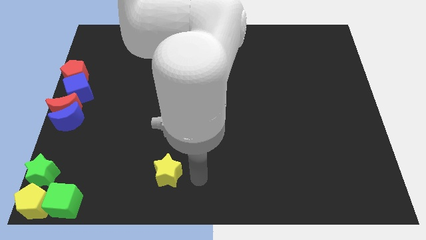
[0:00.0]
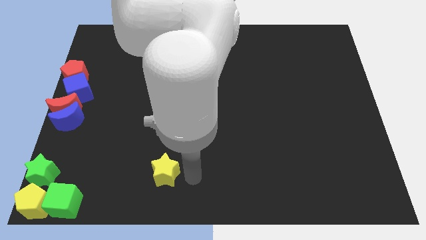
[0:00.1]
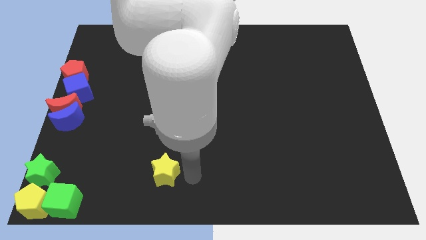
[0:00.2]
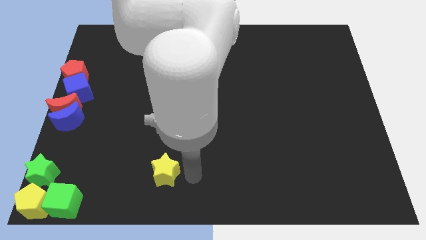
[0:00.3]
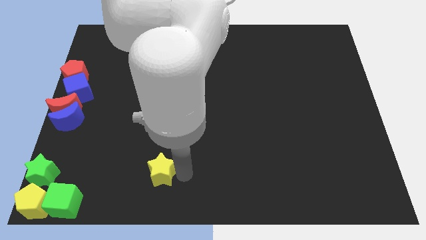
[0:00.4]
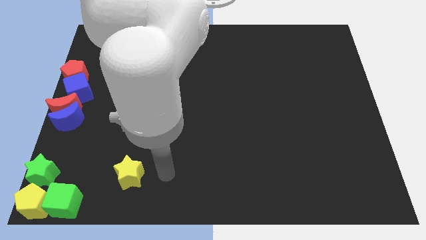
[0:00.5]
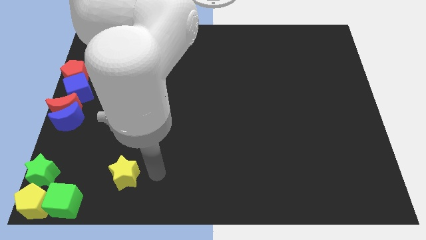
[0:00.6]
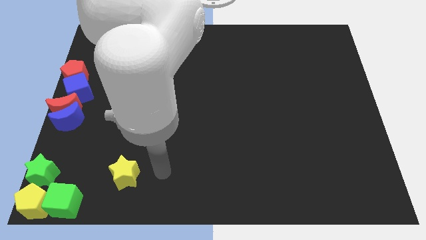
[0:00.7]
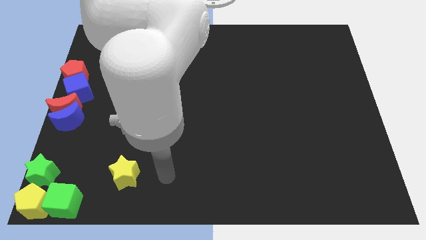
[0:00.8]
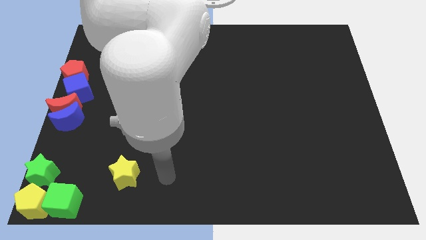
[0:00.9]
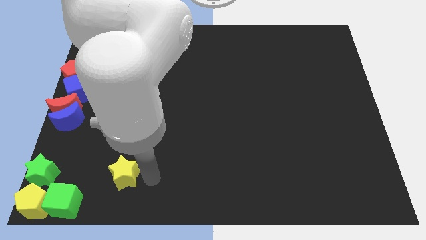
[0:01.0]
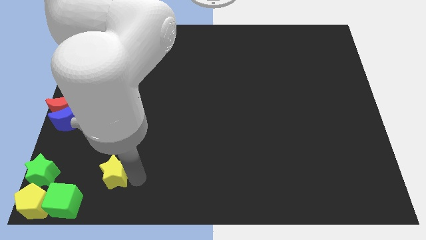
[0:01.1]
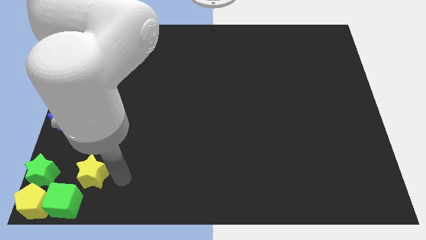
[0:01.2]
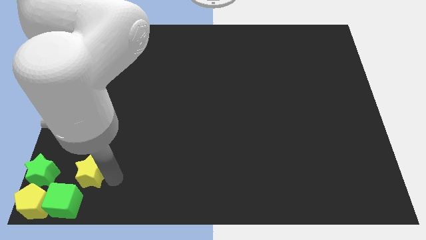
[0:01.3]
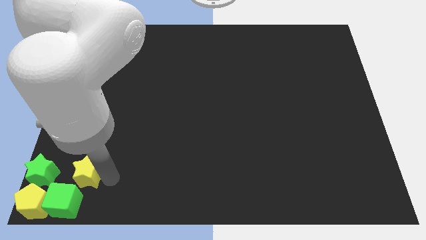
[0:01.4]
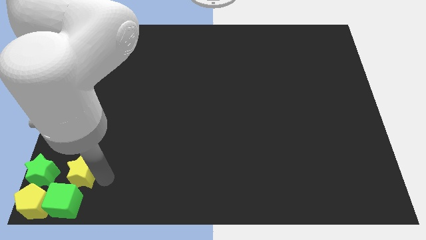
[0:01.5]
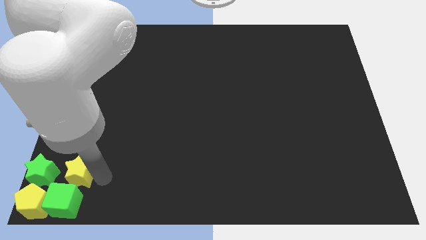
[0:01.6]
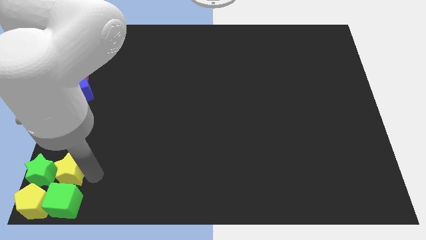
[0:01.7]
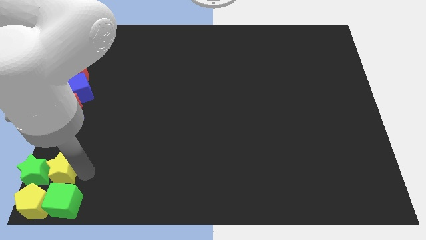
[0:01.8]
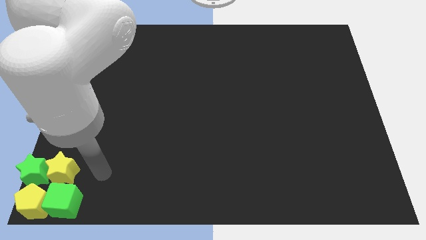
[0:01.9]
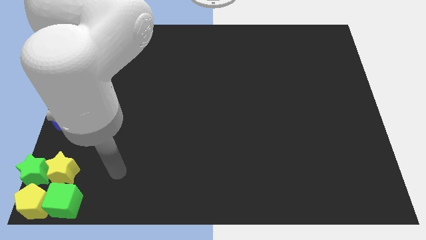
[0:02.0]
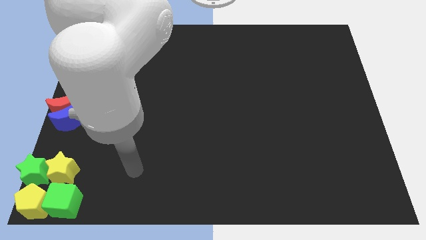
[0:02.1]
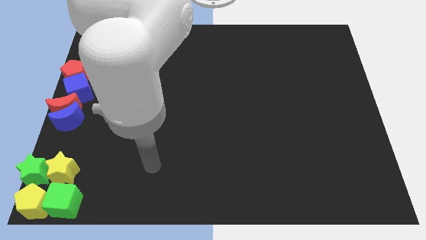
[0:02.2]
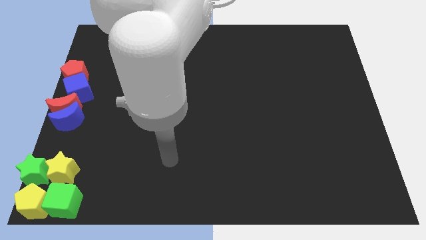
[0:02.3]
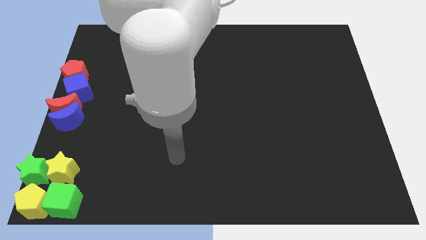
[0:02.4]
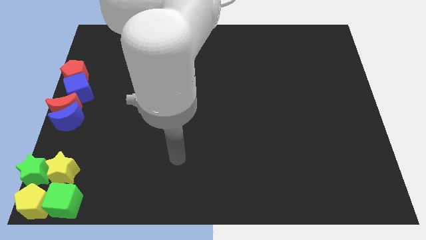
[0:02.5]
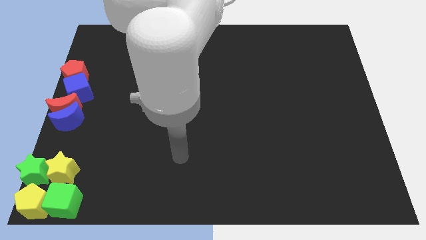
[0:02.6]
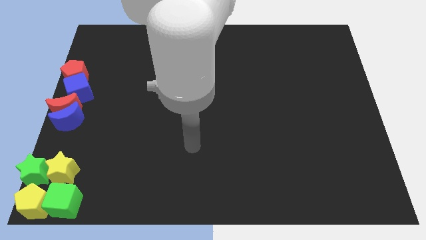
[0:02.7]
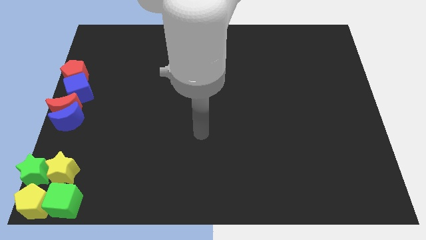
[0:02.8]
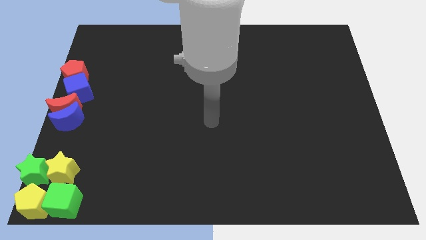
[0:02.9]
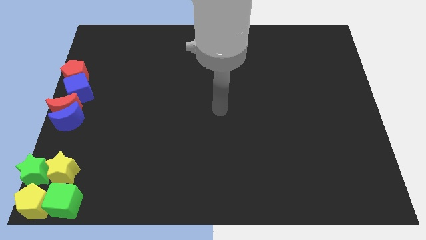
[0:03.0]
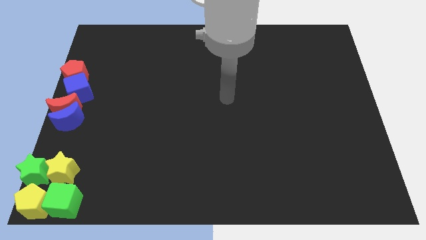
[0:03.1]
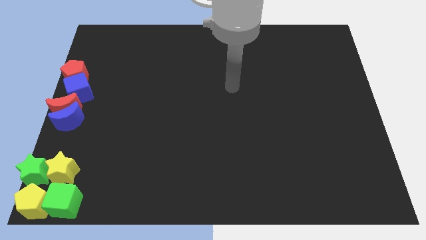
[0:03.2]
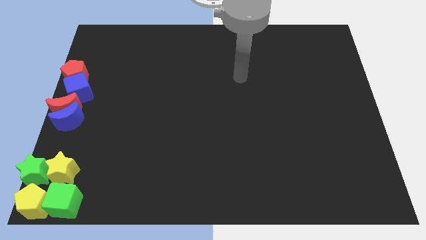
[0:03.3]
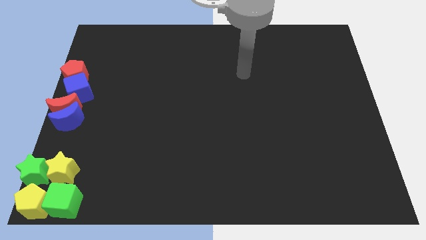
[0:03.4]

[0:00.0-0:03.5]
move the yellow star towards the green star

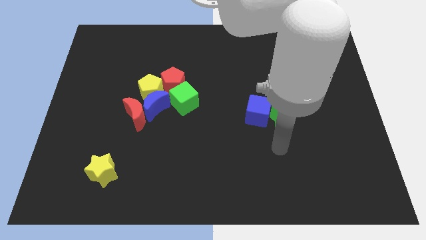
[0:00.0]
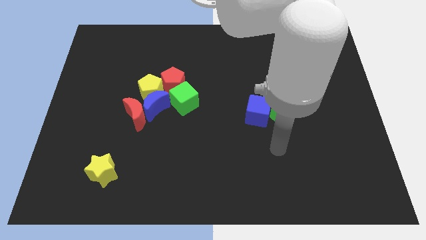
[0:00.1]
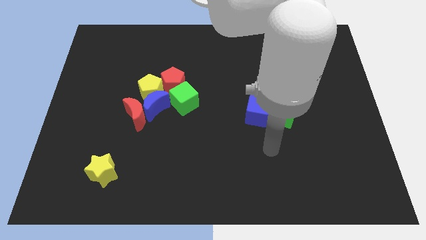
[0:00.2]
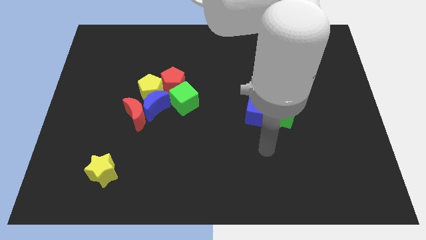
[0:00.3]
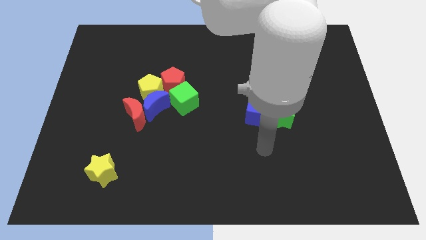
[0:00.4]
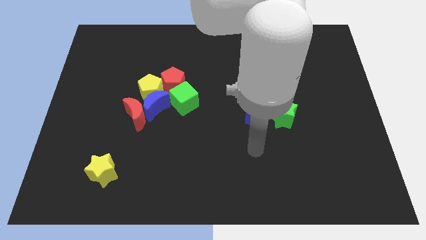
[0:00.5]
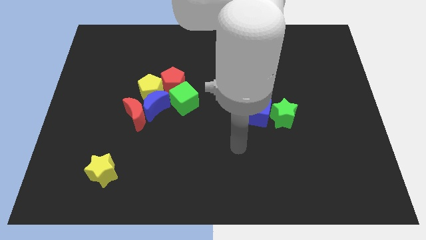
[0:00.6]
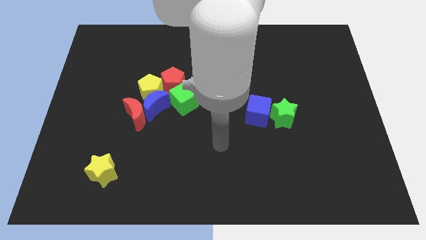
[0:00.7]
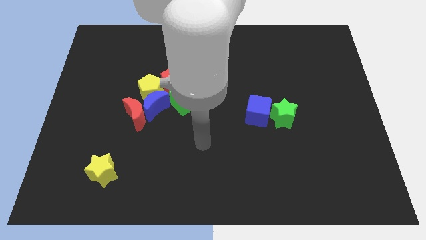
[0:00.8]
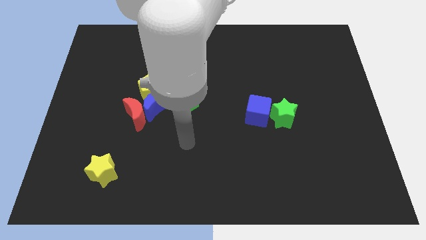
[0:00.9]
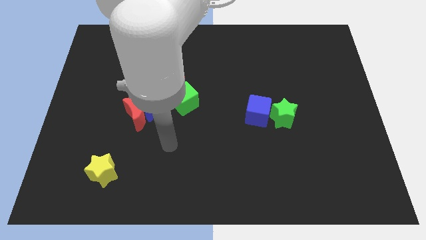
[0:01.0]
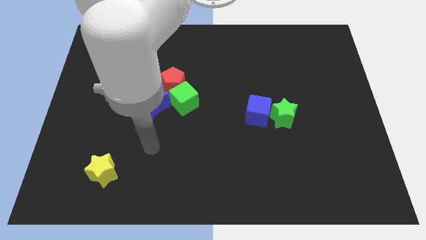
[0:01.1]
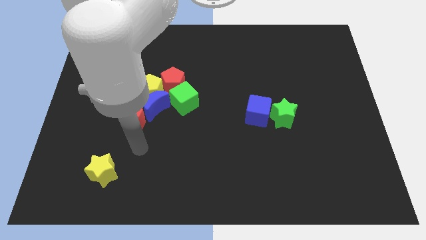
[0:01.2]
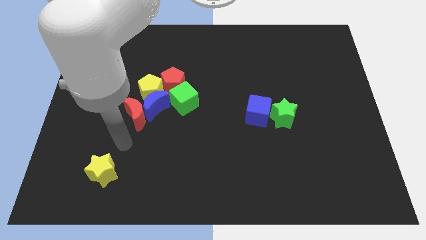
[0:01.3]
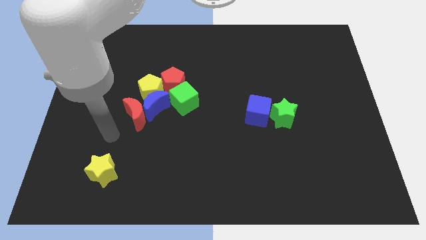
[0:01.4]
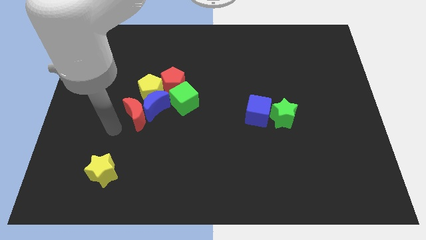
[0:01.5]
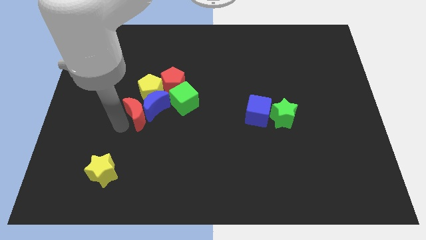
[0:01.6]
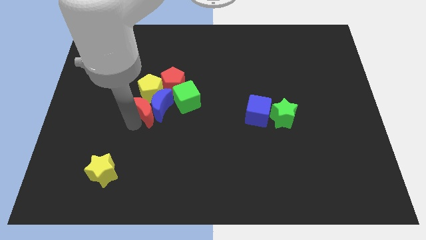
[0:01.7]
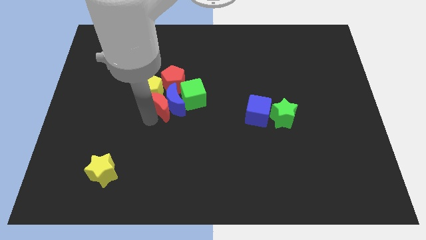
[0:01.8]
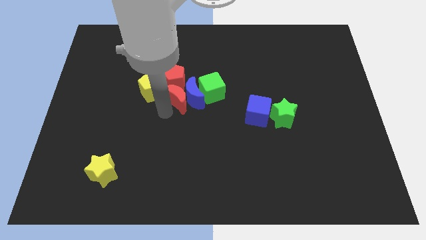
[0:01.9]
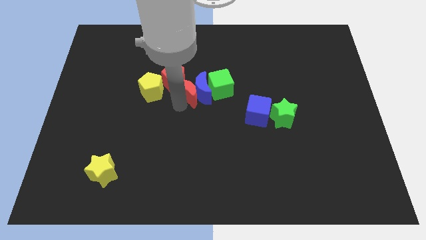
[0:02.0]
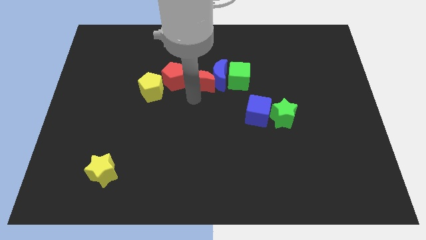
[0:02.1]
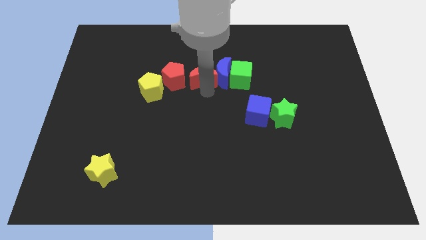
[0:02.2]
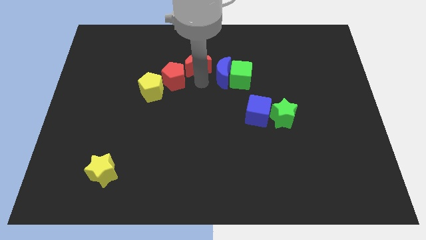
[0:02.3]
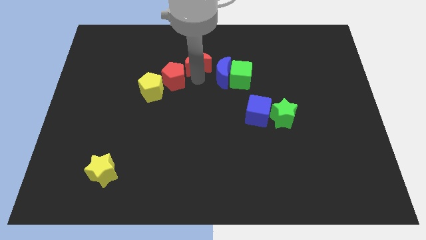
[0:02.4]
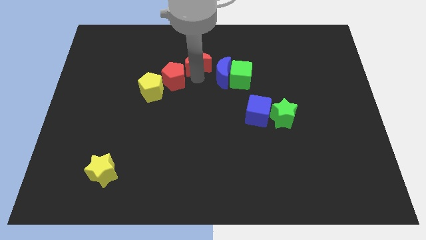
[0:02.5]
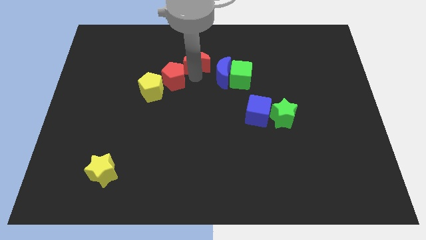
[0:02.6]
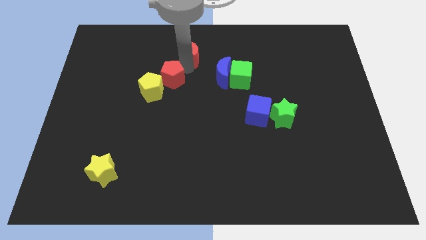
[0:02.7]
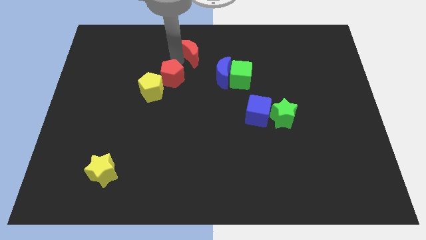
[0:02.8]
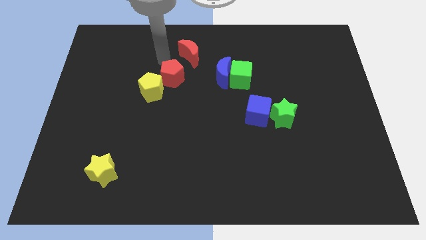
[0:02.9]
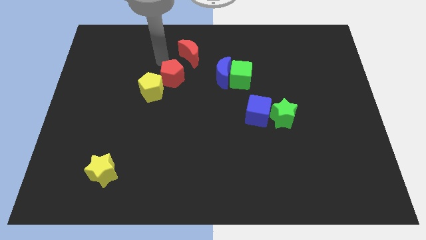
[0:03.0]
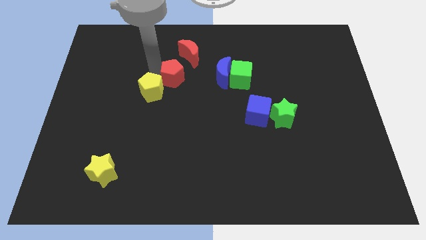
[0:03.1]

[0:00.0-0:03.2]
move the red crescent to the top center of the board

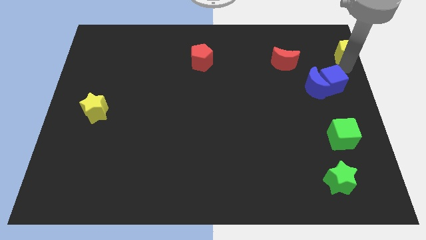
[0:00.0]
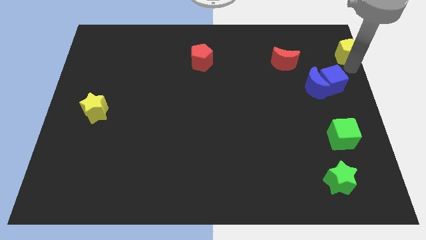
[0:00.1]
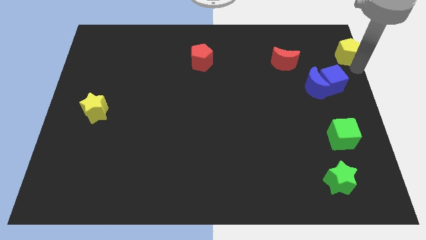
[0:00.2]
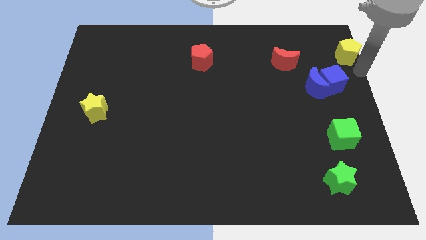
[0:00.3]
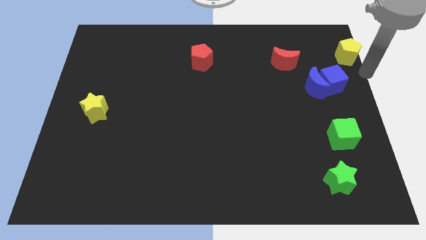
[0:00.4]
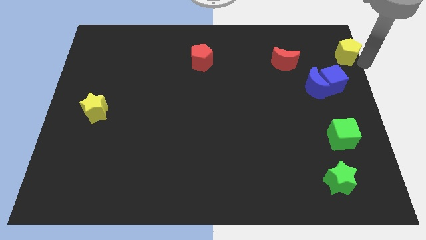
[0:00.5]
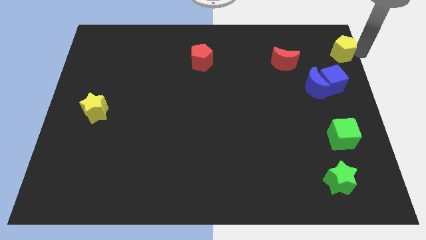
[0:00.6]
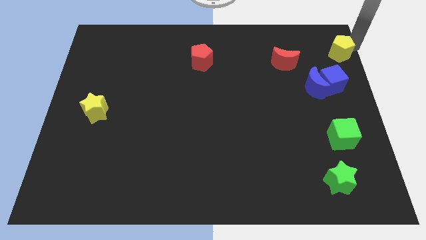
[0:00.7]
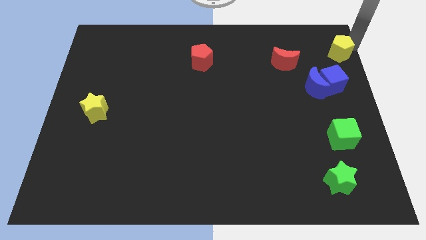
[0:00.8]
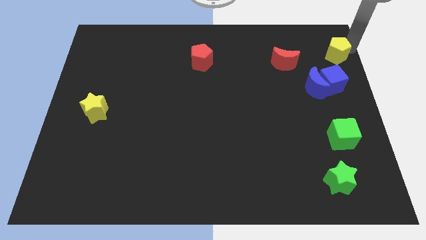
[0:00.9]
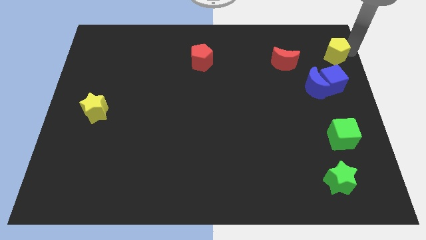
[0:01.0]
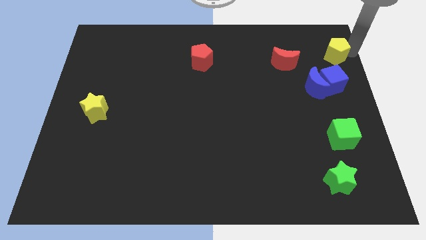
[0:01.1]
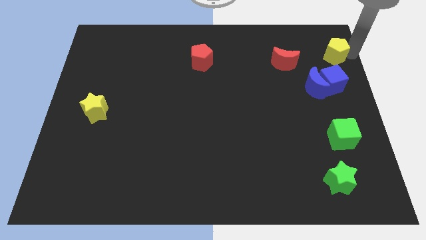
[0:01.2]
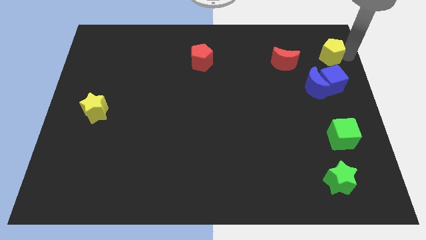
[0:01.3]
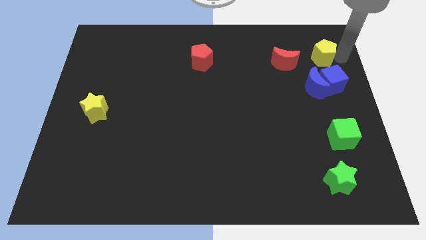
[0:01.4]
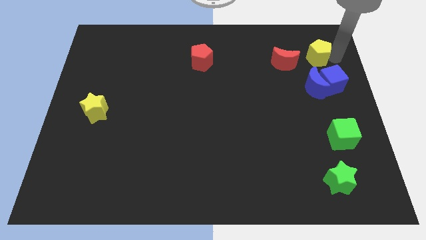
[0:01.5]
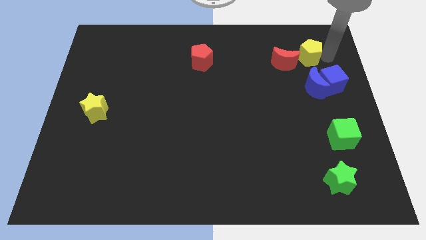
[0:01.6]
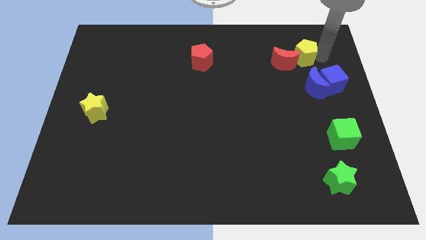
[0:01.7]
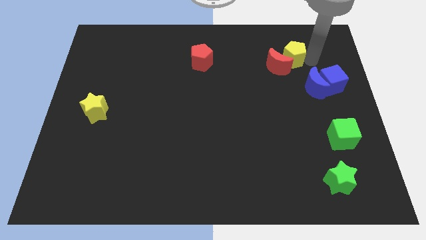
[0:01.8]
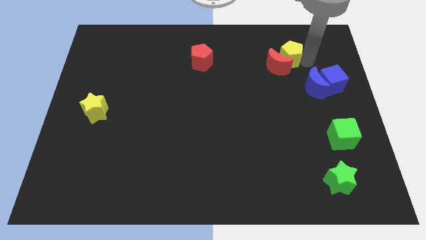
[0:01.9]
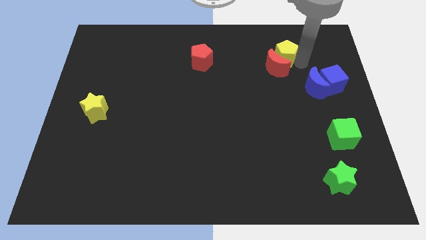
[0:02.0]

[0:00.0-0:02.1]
push the yellow pentagon into red crescent
